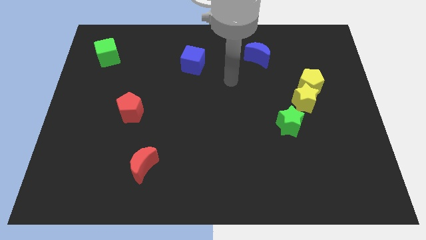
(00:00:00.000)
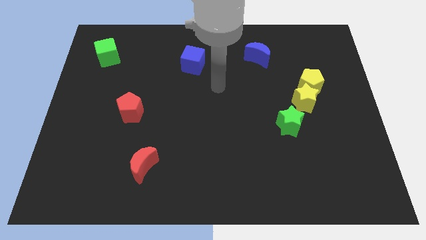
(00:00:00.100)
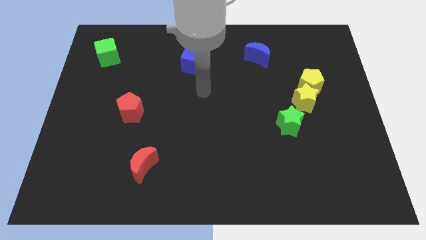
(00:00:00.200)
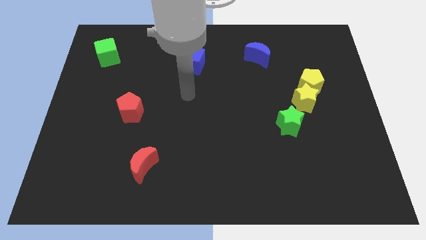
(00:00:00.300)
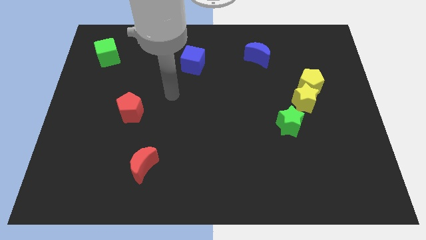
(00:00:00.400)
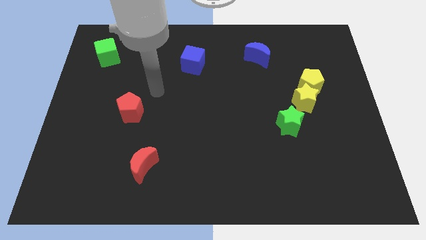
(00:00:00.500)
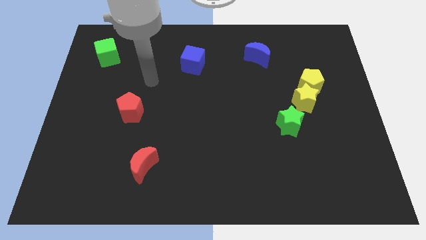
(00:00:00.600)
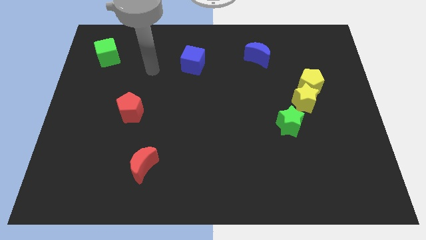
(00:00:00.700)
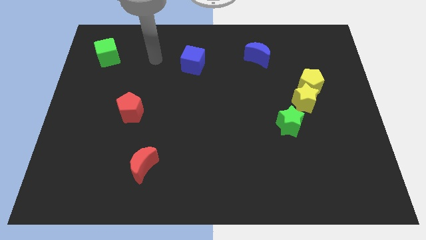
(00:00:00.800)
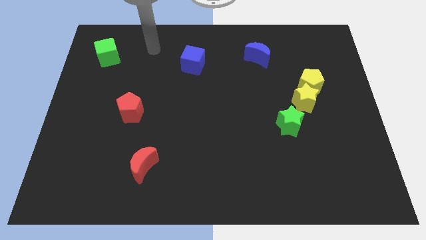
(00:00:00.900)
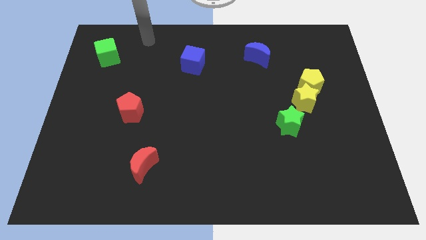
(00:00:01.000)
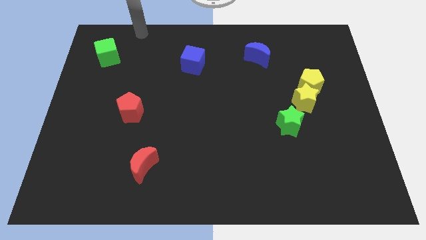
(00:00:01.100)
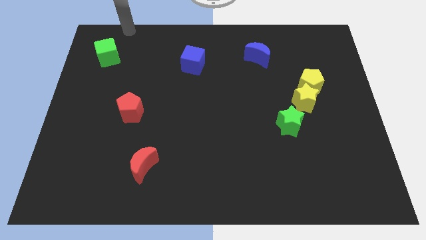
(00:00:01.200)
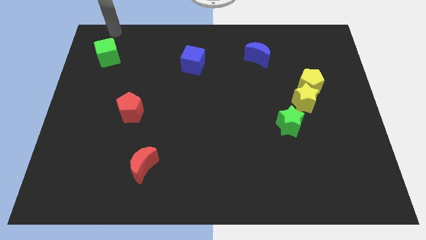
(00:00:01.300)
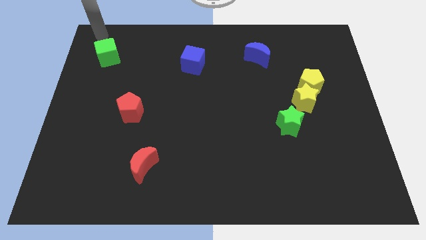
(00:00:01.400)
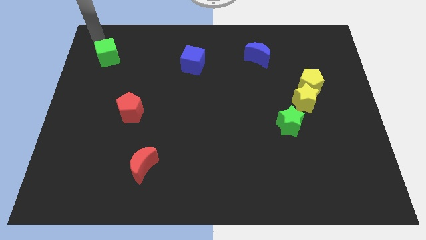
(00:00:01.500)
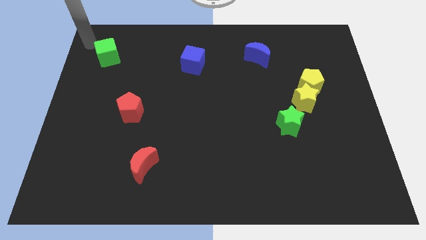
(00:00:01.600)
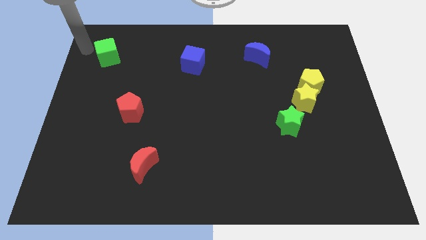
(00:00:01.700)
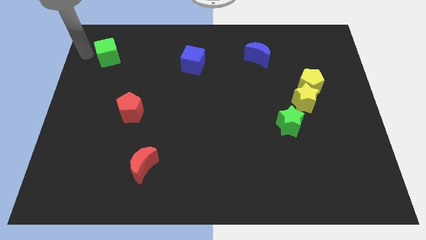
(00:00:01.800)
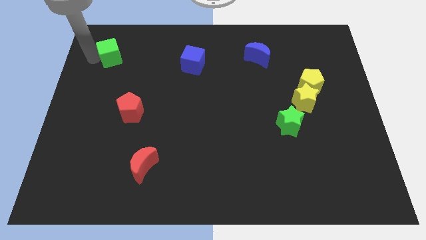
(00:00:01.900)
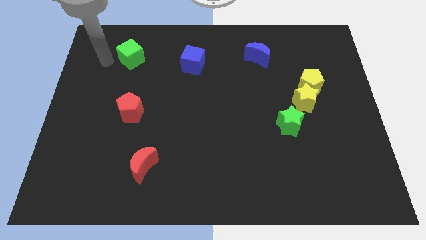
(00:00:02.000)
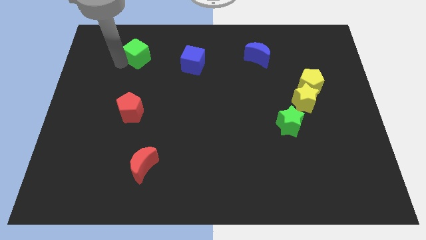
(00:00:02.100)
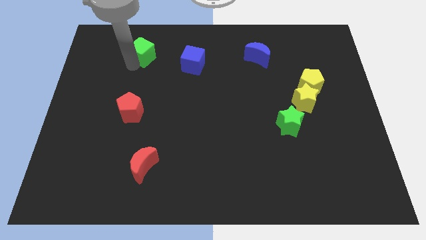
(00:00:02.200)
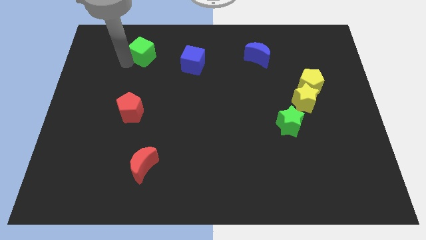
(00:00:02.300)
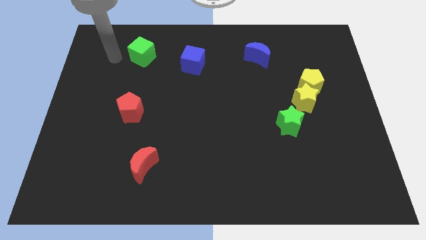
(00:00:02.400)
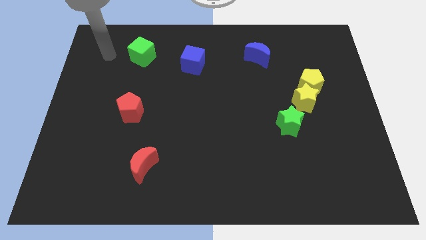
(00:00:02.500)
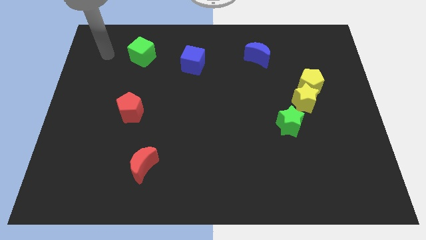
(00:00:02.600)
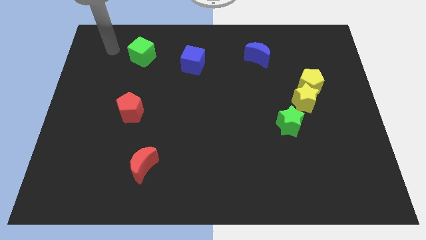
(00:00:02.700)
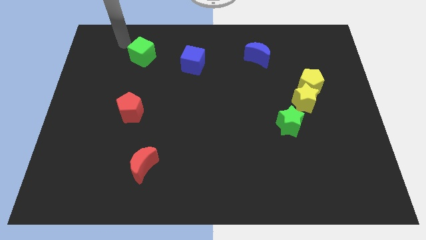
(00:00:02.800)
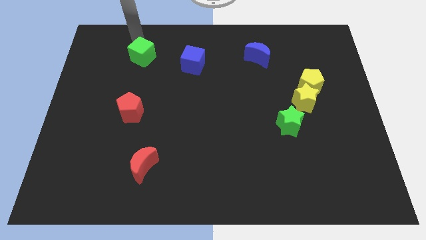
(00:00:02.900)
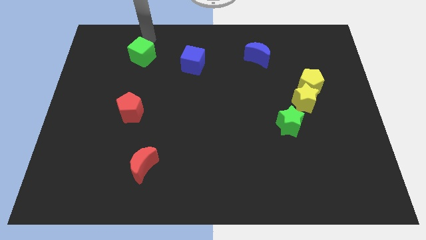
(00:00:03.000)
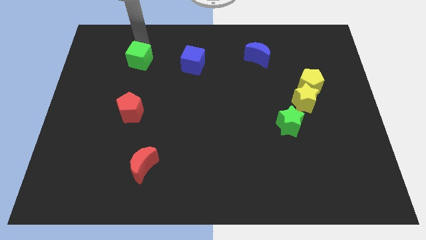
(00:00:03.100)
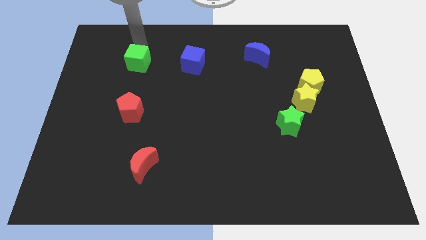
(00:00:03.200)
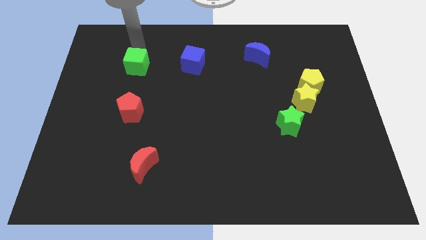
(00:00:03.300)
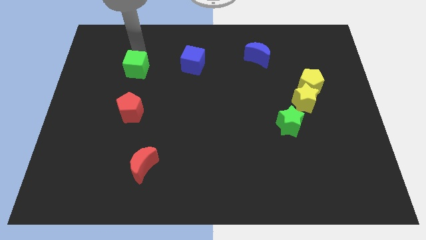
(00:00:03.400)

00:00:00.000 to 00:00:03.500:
place the green cube left to the blue square

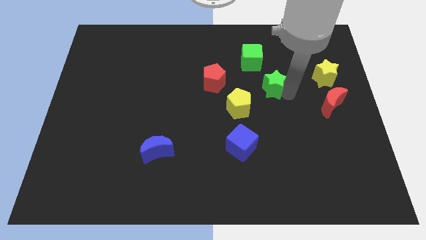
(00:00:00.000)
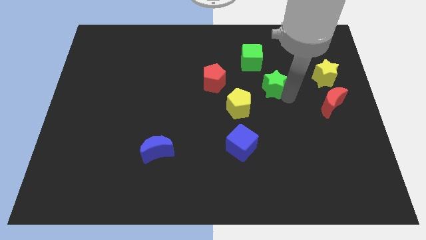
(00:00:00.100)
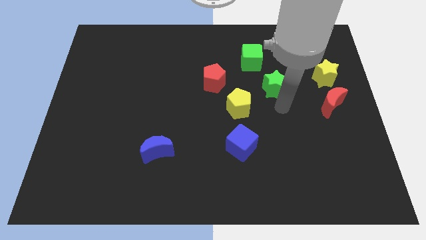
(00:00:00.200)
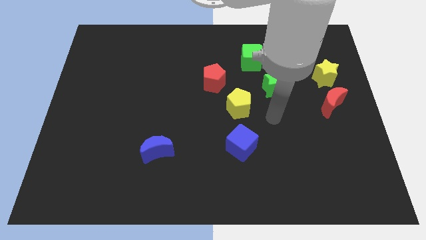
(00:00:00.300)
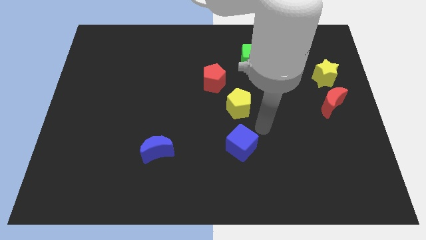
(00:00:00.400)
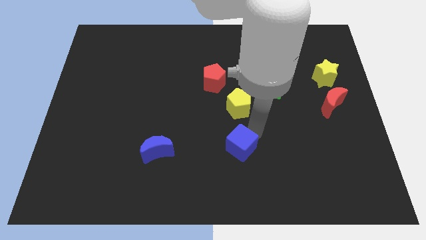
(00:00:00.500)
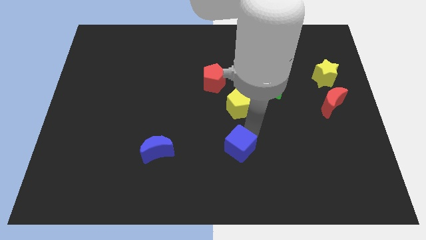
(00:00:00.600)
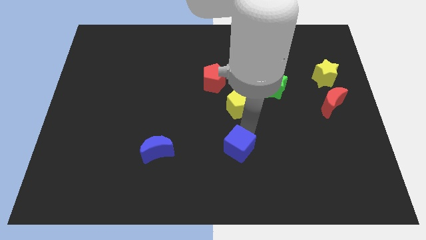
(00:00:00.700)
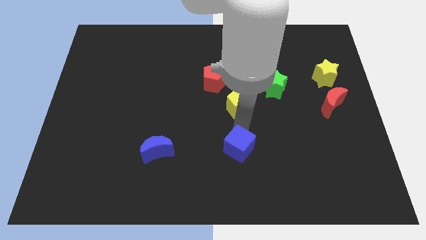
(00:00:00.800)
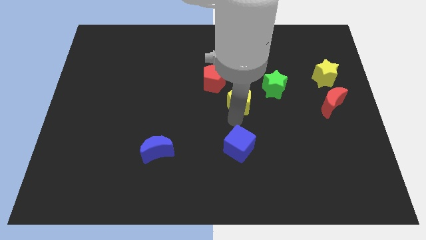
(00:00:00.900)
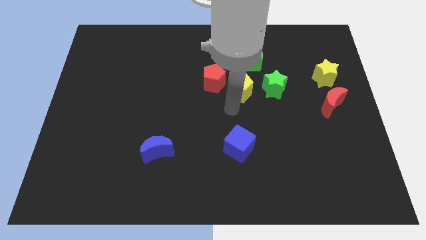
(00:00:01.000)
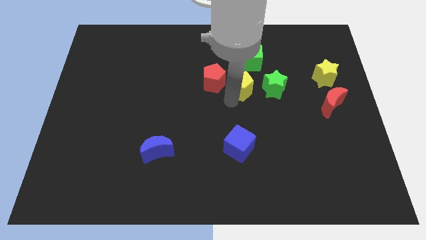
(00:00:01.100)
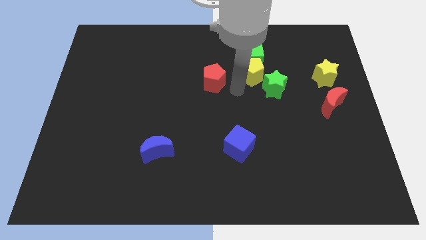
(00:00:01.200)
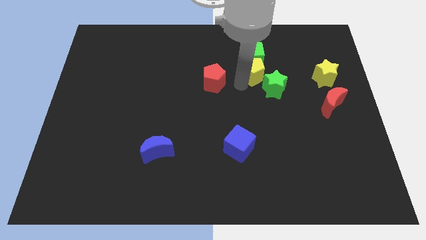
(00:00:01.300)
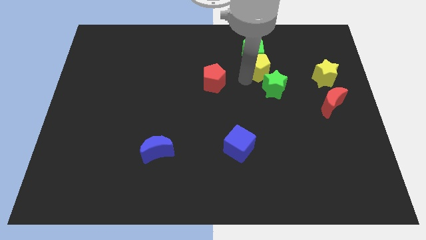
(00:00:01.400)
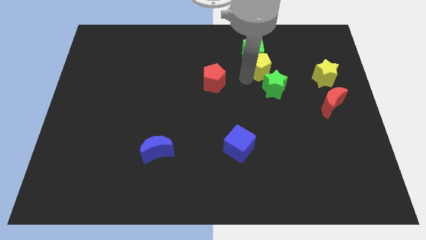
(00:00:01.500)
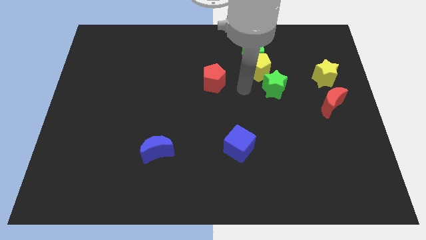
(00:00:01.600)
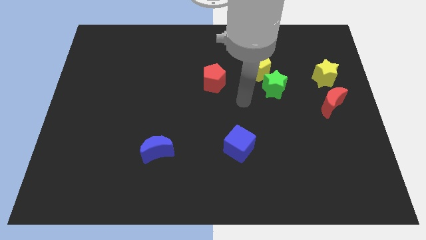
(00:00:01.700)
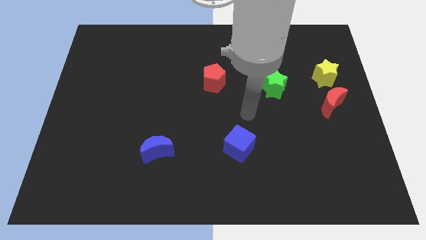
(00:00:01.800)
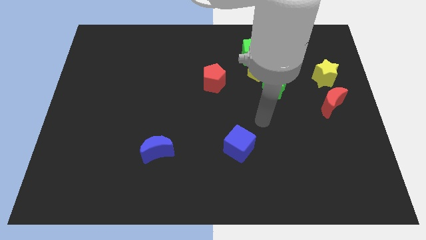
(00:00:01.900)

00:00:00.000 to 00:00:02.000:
push the yellow pentagon between green blocks

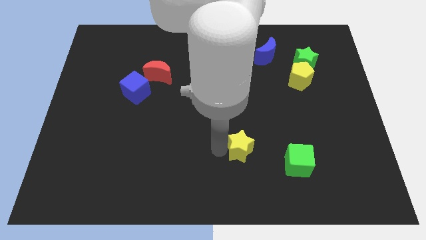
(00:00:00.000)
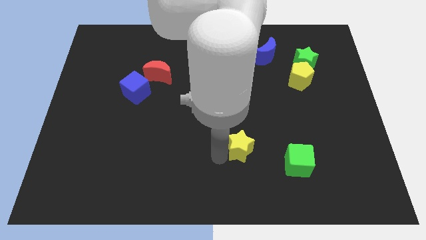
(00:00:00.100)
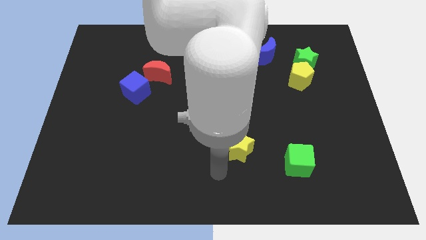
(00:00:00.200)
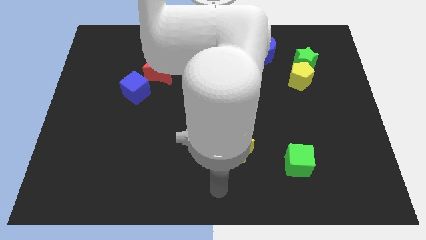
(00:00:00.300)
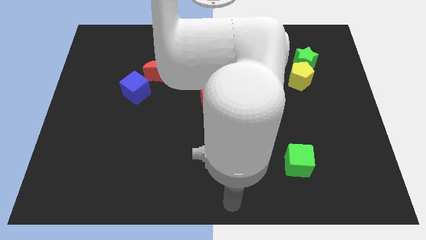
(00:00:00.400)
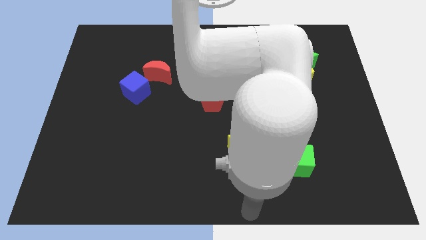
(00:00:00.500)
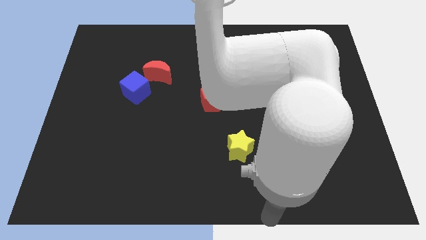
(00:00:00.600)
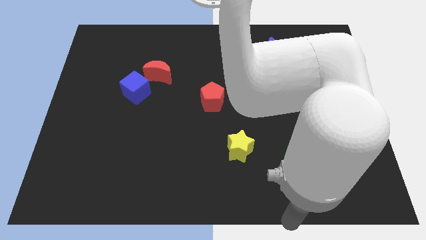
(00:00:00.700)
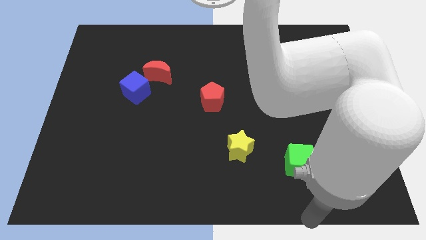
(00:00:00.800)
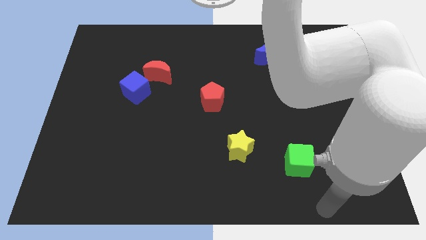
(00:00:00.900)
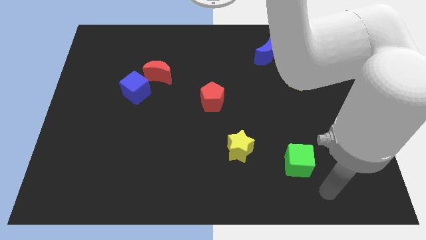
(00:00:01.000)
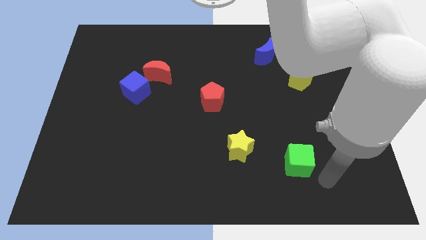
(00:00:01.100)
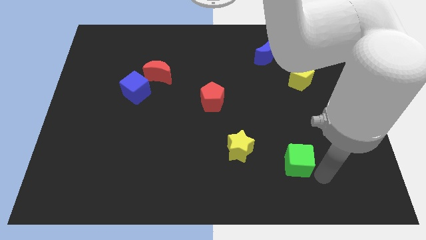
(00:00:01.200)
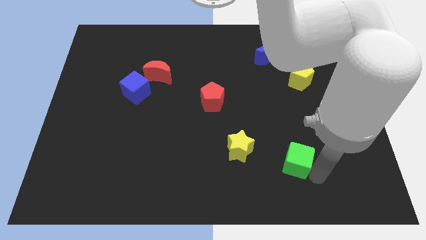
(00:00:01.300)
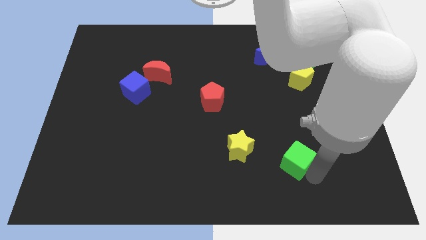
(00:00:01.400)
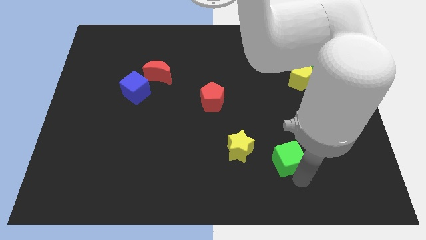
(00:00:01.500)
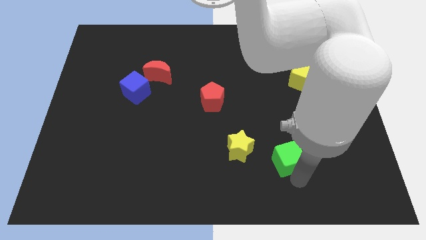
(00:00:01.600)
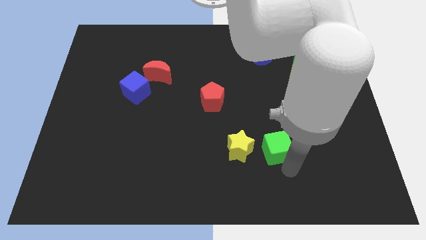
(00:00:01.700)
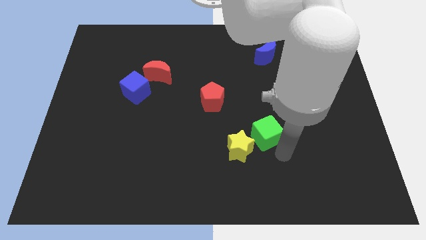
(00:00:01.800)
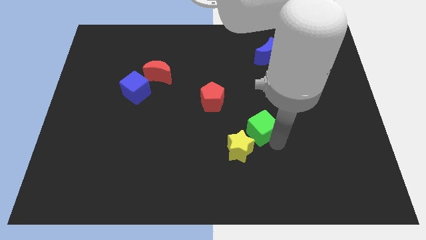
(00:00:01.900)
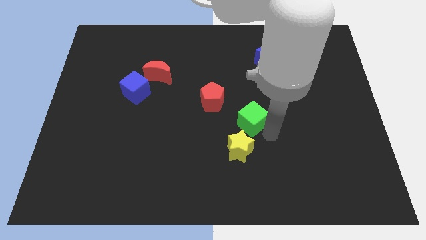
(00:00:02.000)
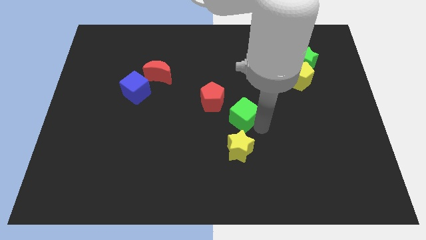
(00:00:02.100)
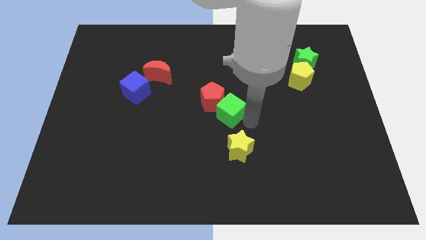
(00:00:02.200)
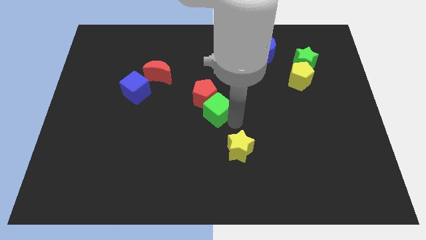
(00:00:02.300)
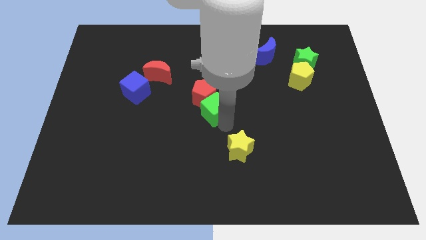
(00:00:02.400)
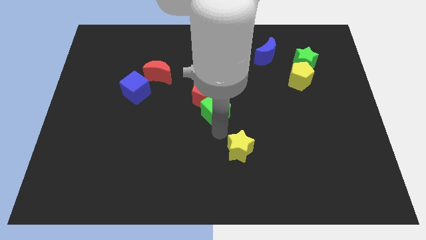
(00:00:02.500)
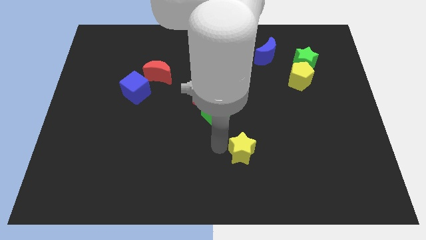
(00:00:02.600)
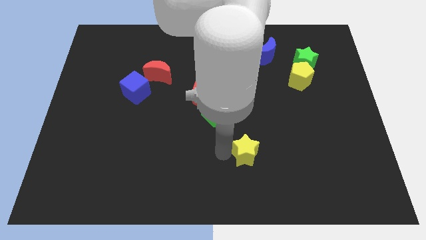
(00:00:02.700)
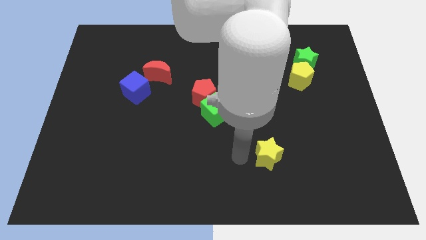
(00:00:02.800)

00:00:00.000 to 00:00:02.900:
push the green cube into the red pentagon

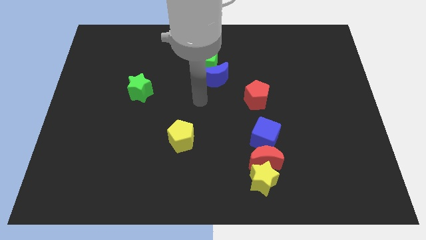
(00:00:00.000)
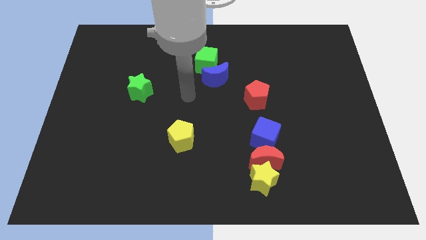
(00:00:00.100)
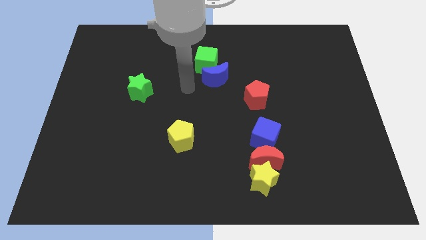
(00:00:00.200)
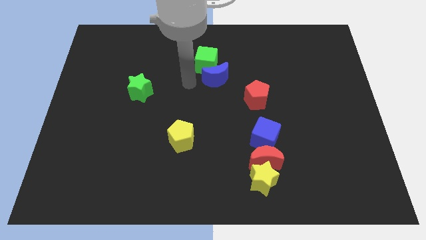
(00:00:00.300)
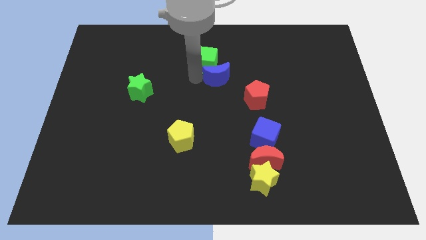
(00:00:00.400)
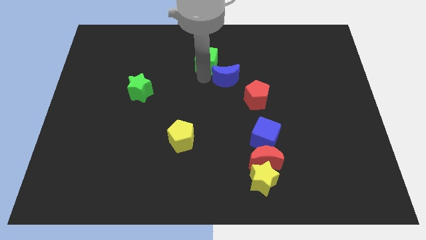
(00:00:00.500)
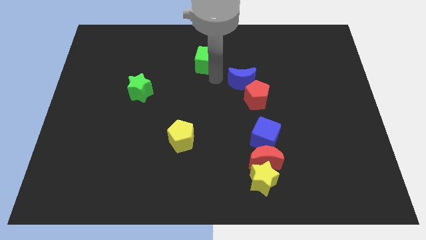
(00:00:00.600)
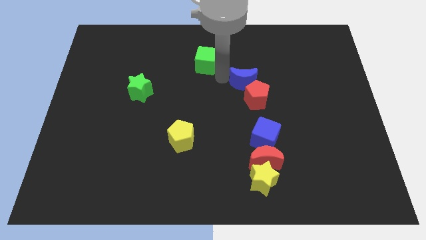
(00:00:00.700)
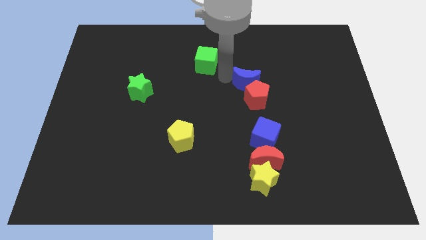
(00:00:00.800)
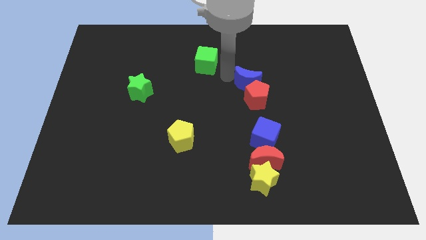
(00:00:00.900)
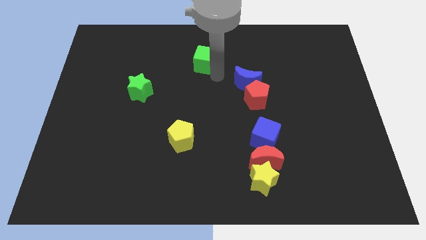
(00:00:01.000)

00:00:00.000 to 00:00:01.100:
slide the blue crescent above the red pentagon
